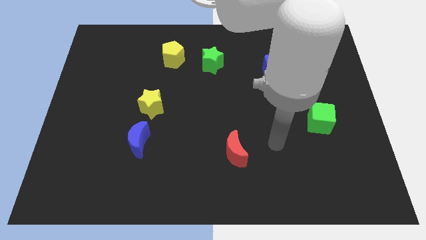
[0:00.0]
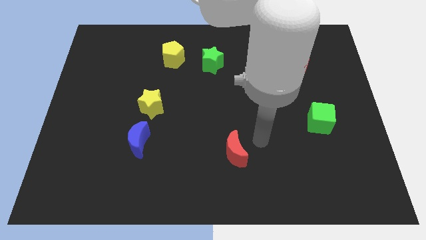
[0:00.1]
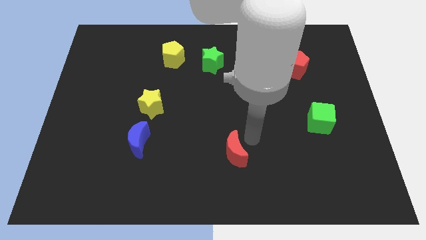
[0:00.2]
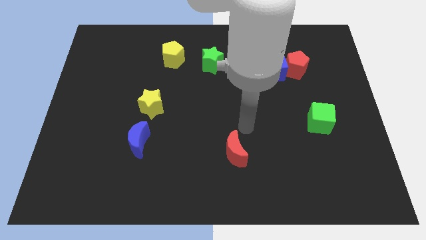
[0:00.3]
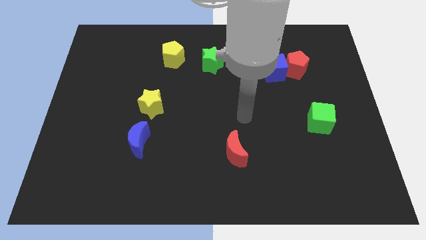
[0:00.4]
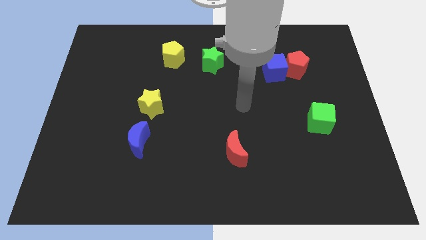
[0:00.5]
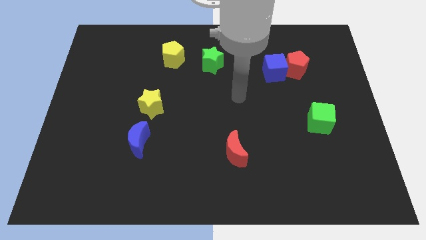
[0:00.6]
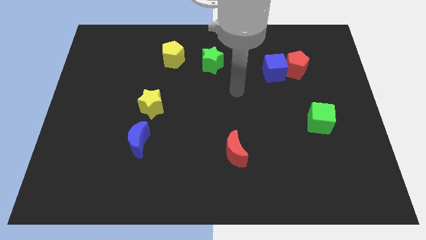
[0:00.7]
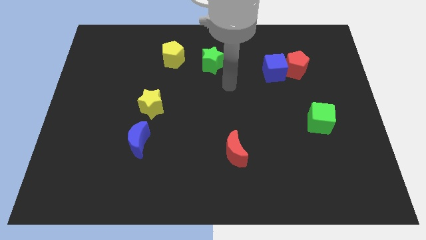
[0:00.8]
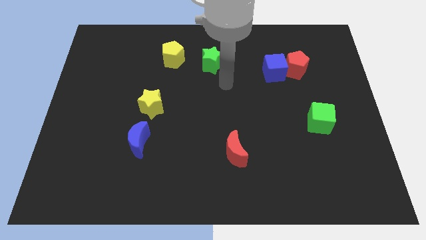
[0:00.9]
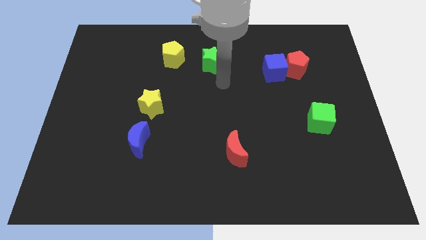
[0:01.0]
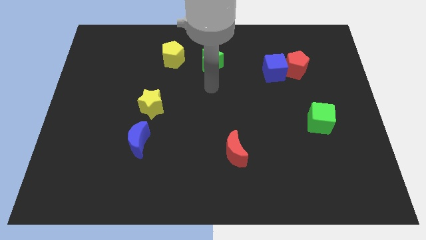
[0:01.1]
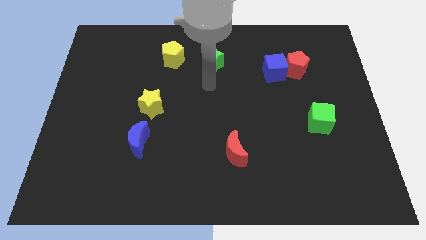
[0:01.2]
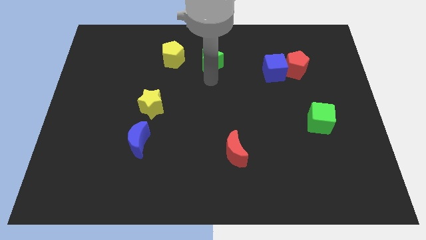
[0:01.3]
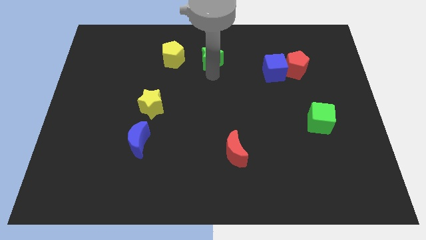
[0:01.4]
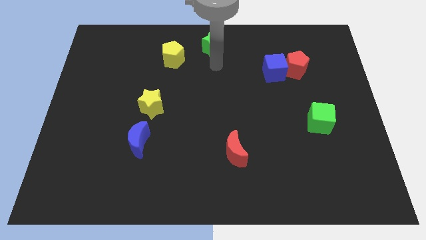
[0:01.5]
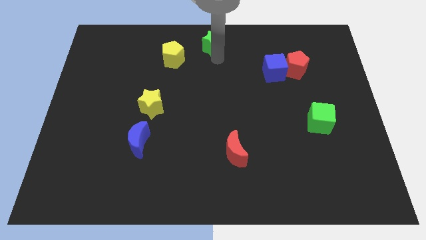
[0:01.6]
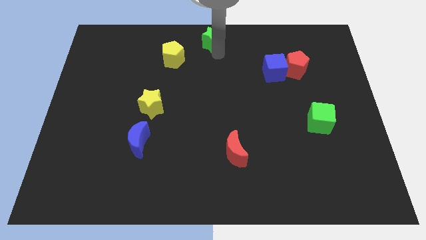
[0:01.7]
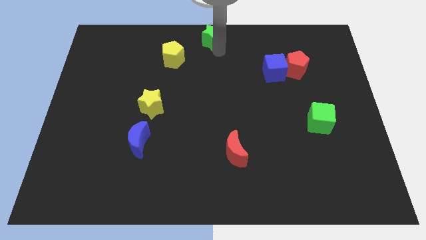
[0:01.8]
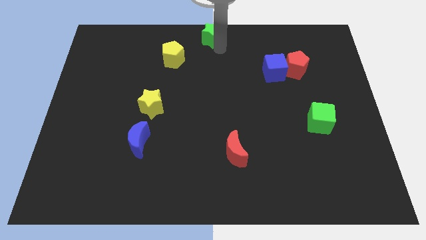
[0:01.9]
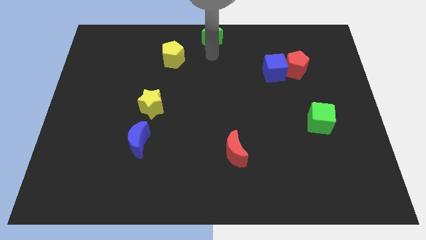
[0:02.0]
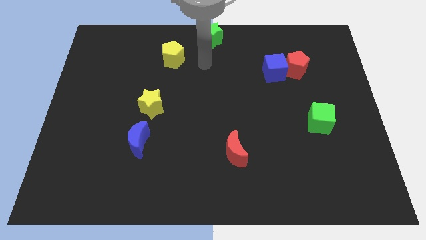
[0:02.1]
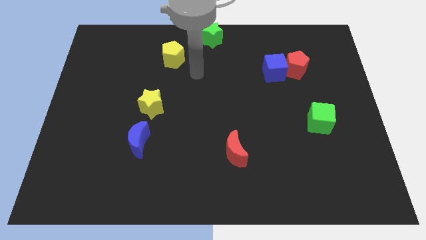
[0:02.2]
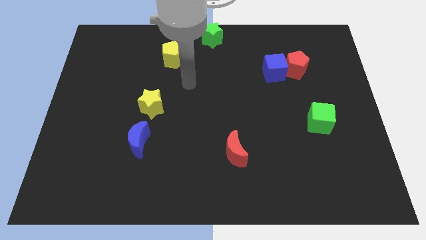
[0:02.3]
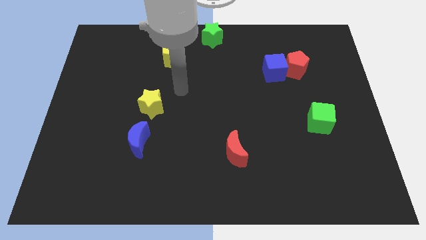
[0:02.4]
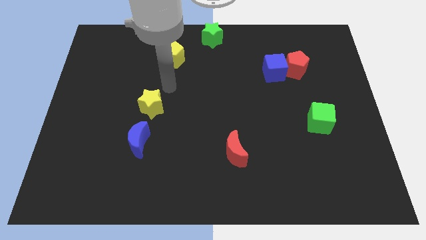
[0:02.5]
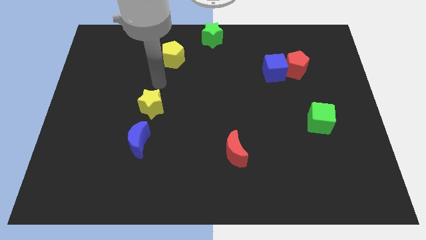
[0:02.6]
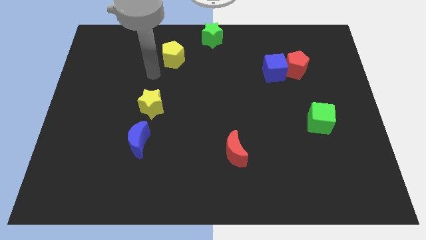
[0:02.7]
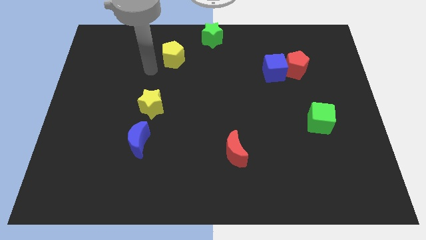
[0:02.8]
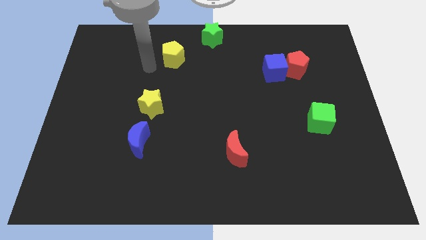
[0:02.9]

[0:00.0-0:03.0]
move the green star to the top center

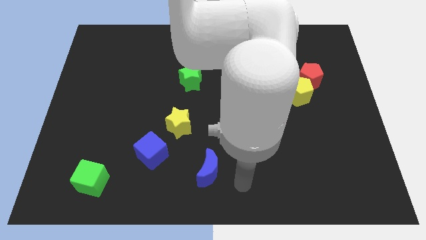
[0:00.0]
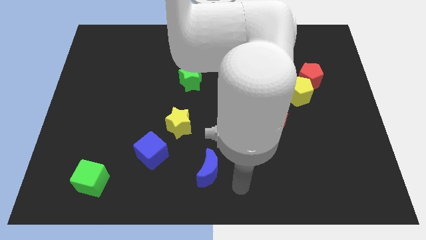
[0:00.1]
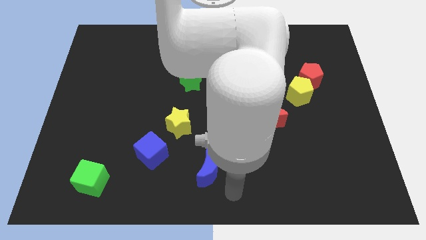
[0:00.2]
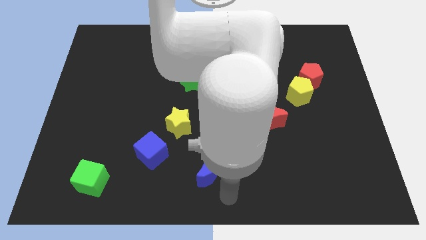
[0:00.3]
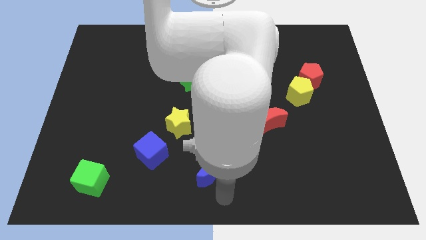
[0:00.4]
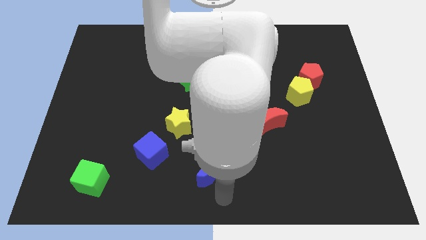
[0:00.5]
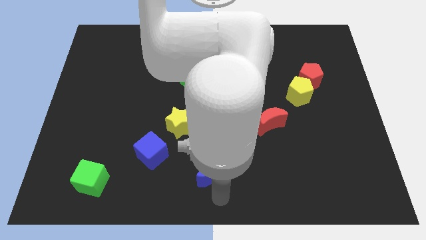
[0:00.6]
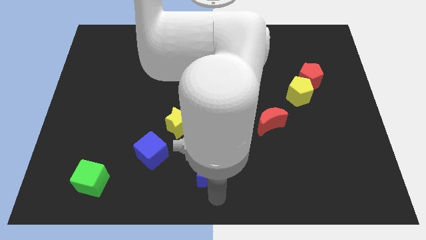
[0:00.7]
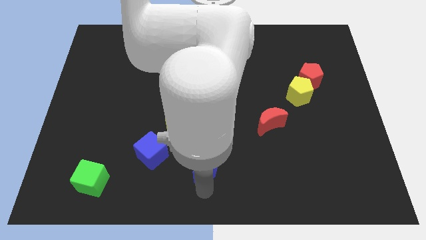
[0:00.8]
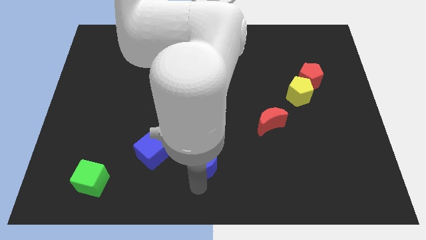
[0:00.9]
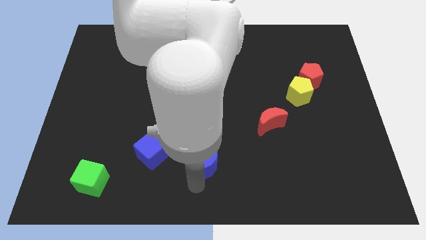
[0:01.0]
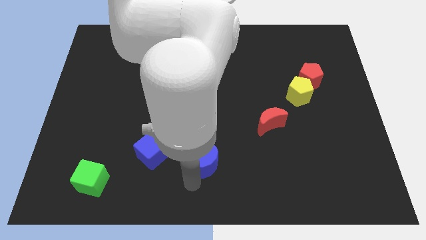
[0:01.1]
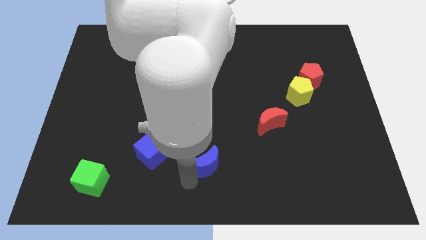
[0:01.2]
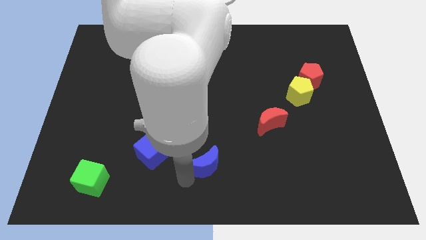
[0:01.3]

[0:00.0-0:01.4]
touch the blue moon

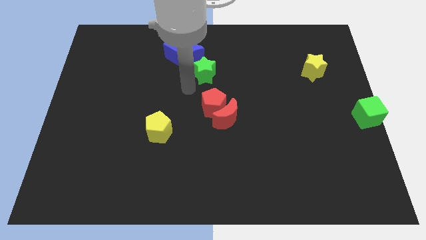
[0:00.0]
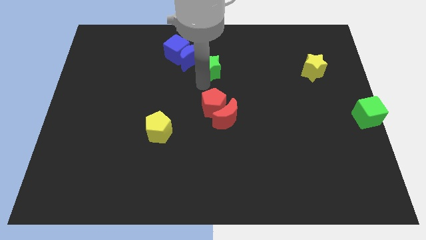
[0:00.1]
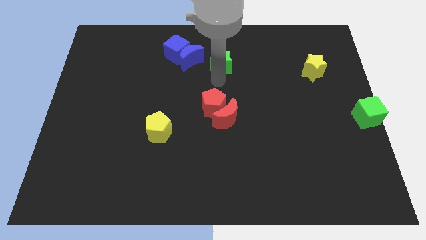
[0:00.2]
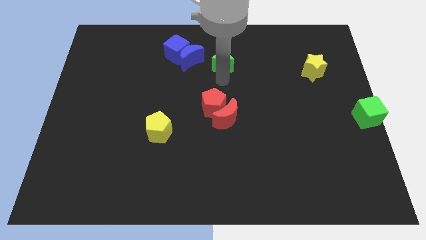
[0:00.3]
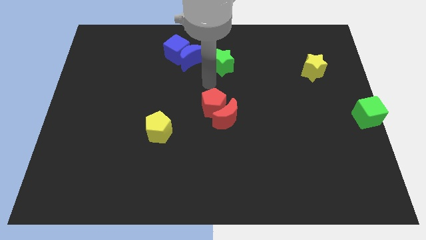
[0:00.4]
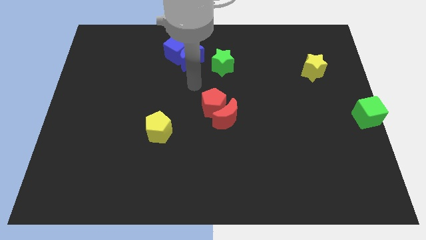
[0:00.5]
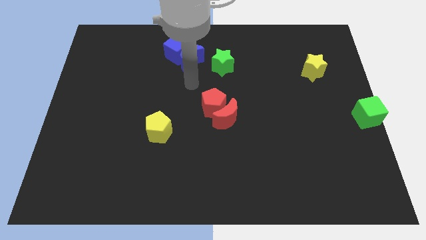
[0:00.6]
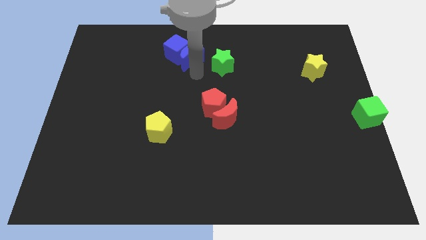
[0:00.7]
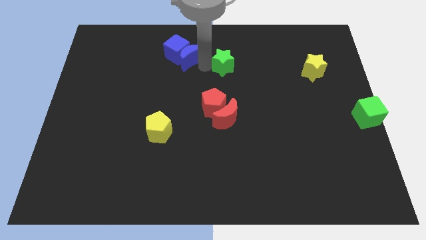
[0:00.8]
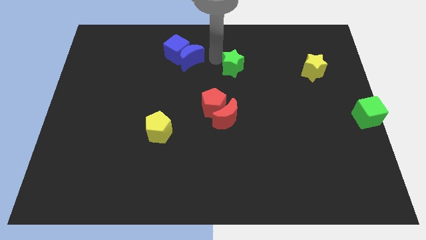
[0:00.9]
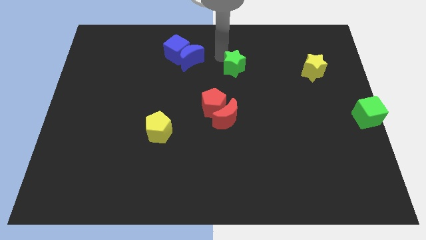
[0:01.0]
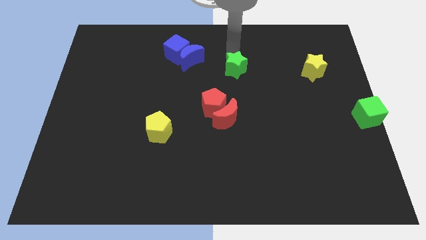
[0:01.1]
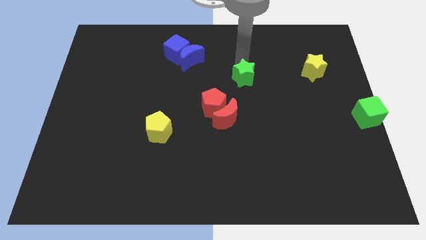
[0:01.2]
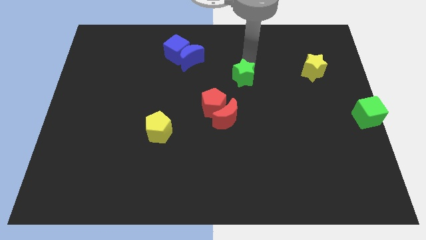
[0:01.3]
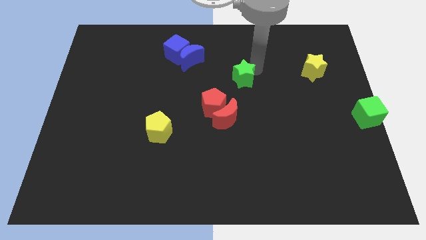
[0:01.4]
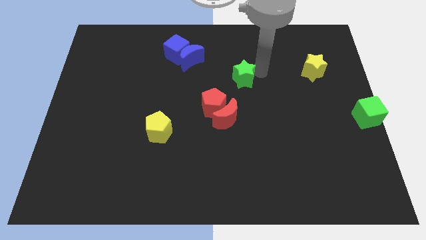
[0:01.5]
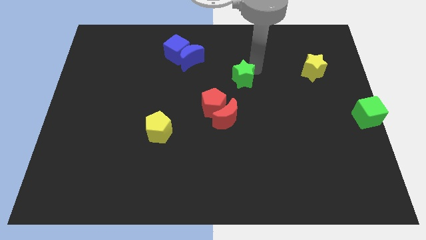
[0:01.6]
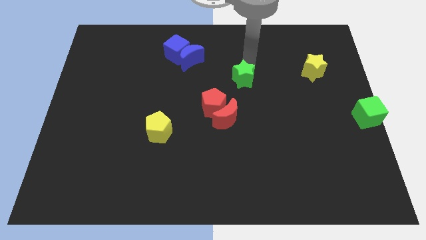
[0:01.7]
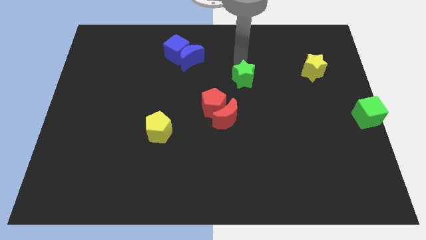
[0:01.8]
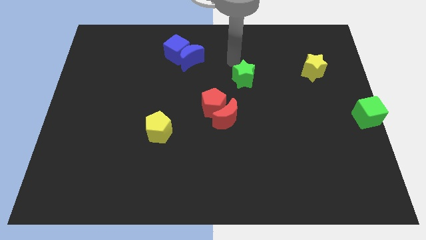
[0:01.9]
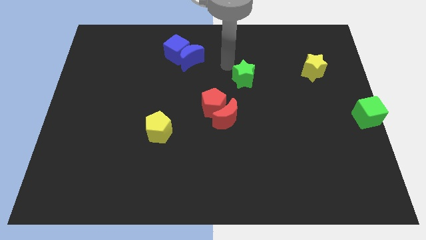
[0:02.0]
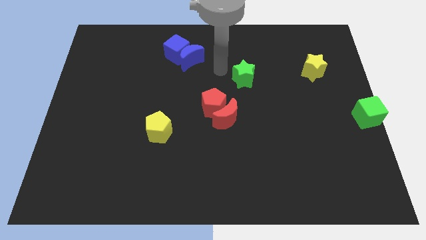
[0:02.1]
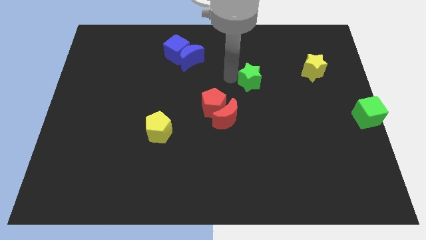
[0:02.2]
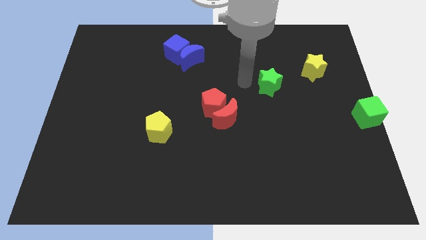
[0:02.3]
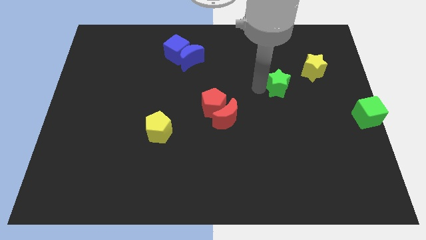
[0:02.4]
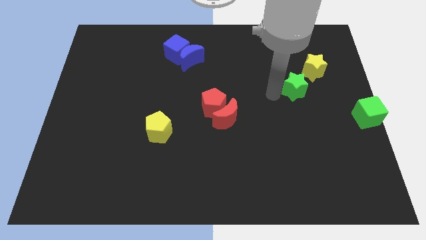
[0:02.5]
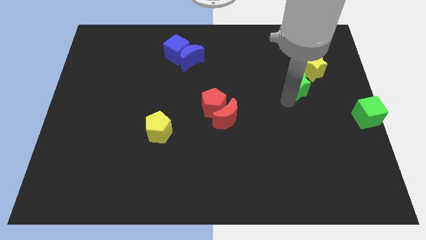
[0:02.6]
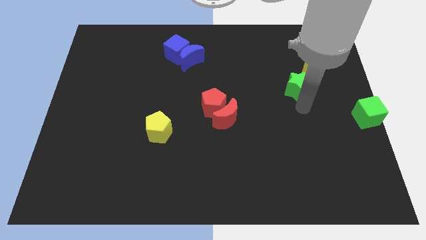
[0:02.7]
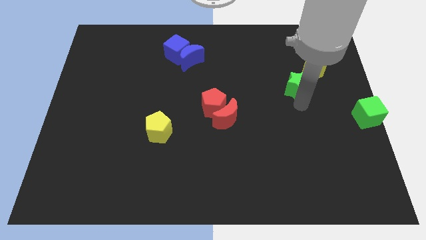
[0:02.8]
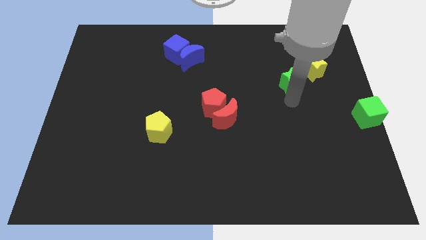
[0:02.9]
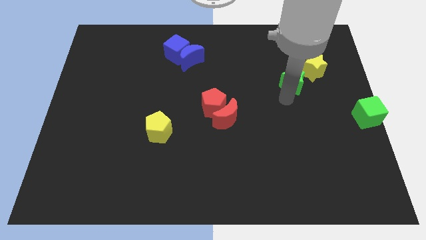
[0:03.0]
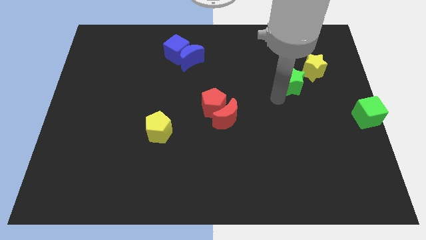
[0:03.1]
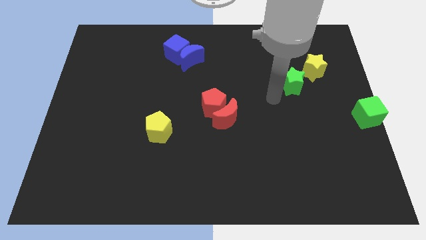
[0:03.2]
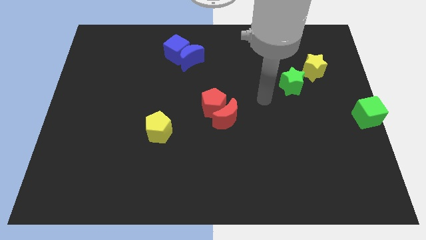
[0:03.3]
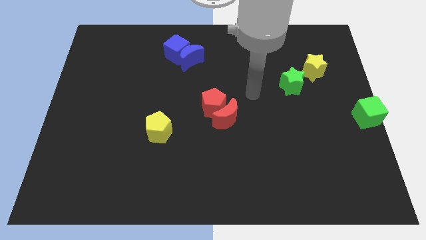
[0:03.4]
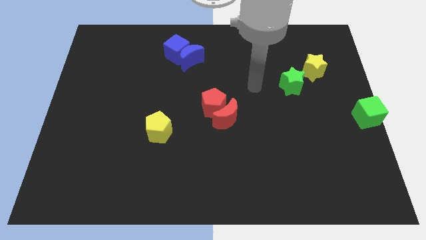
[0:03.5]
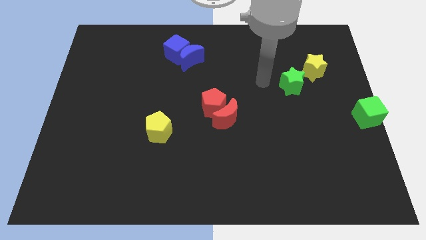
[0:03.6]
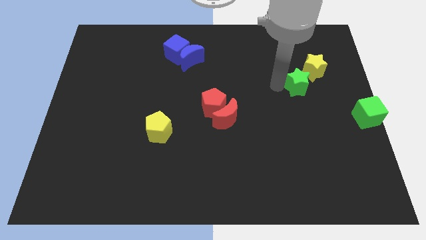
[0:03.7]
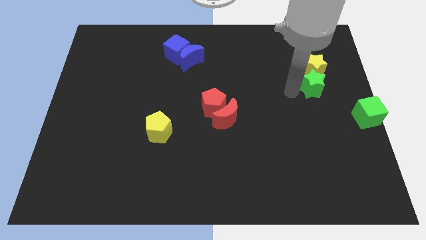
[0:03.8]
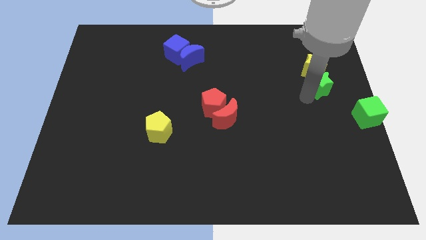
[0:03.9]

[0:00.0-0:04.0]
move the green star to the bottom side of the yellow star

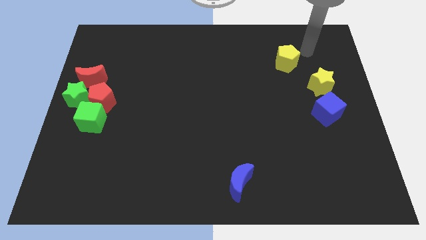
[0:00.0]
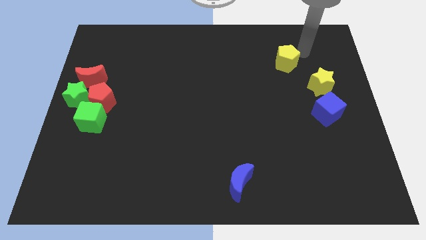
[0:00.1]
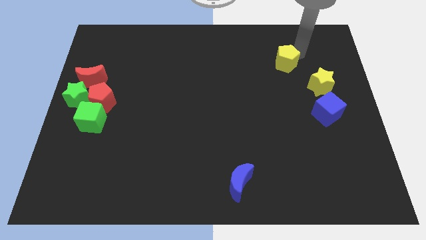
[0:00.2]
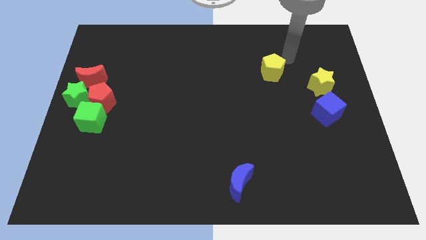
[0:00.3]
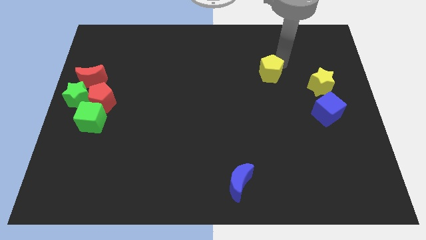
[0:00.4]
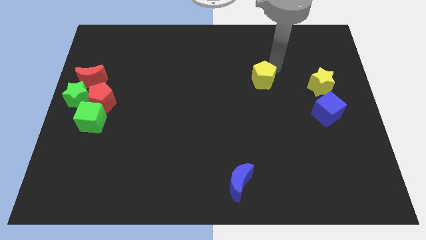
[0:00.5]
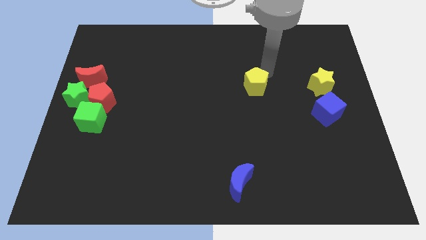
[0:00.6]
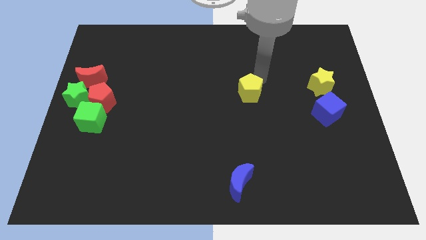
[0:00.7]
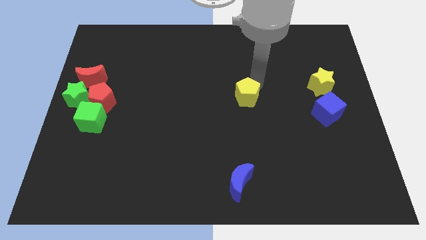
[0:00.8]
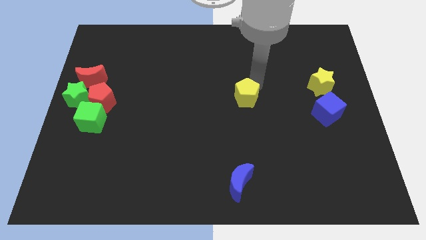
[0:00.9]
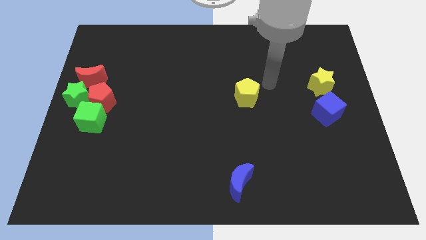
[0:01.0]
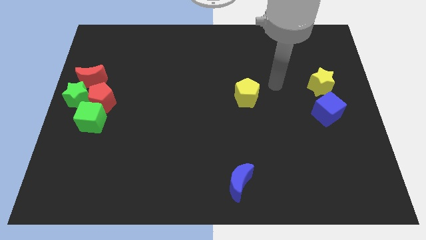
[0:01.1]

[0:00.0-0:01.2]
move the yellow pentagon towards center
